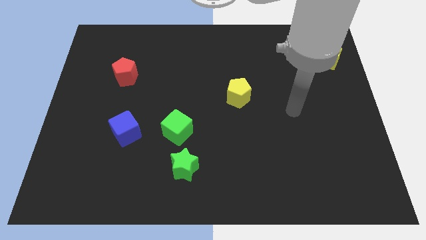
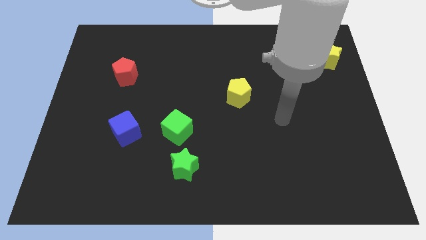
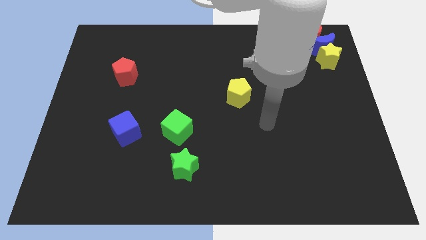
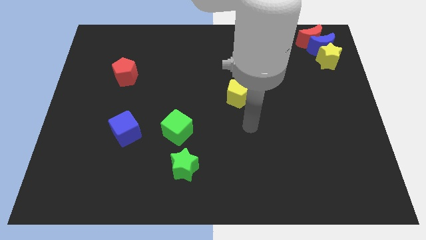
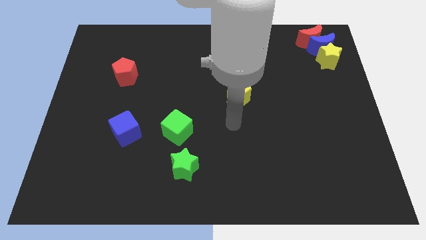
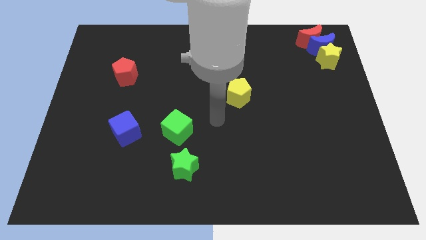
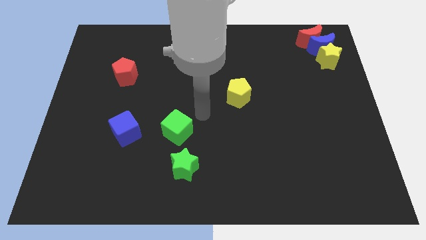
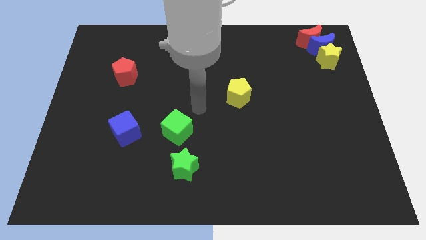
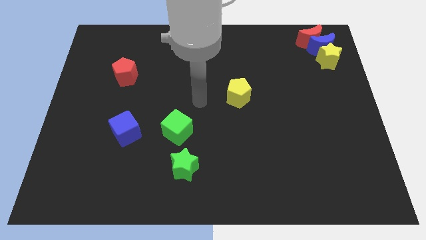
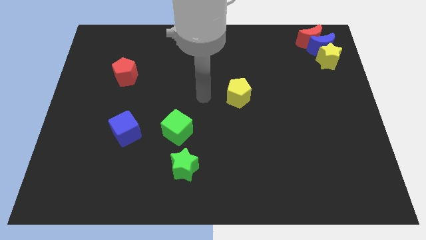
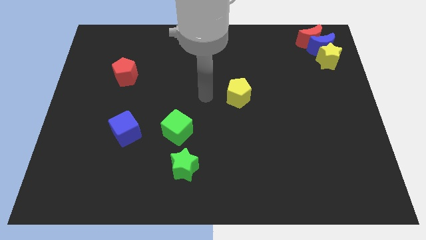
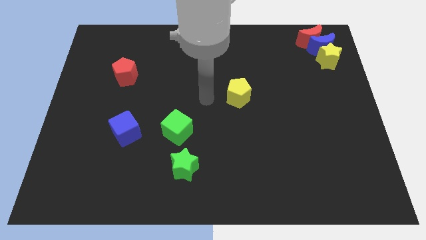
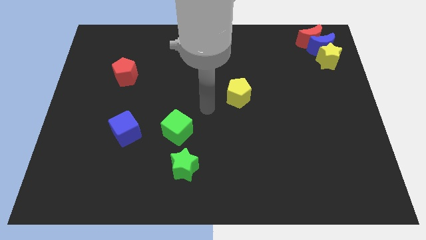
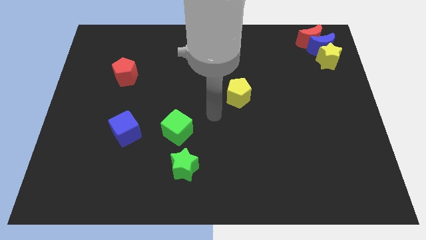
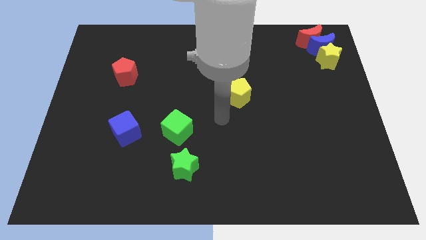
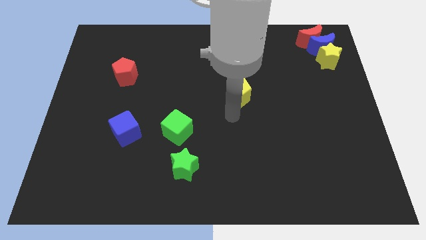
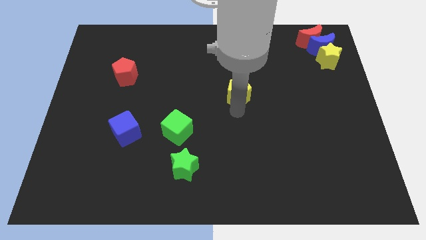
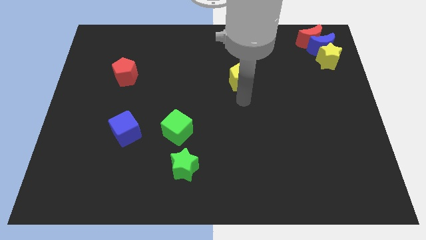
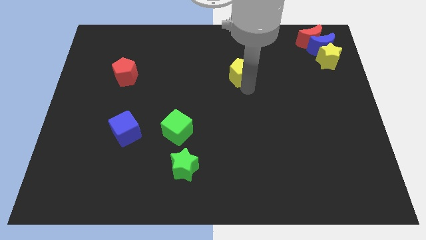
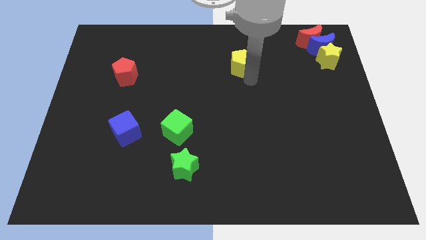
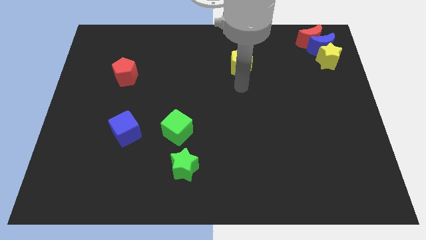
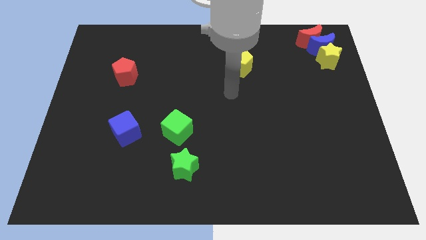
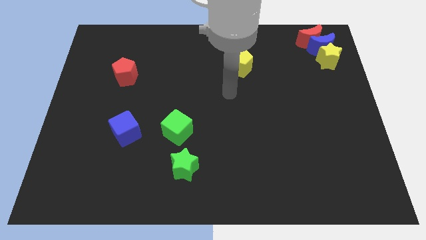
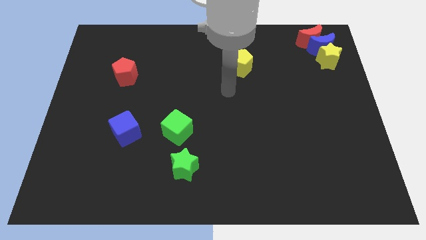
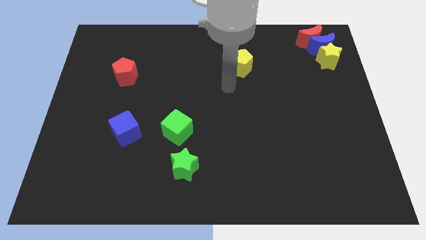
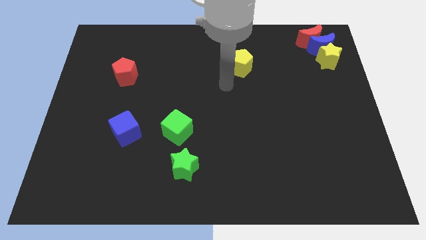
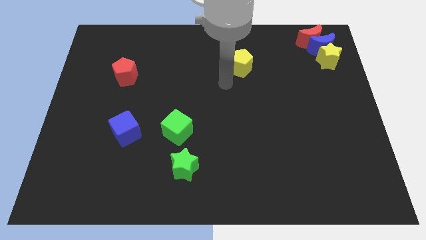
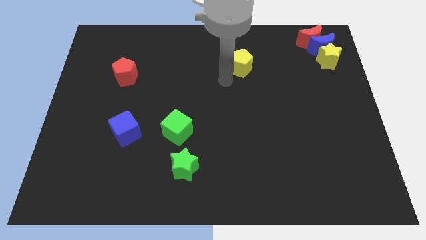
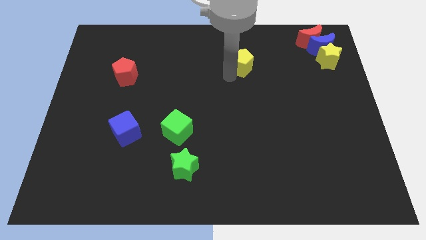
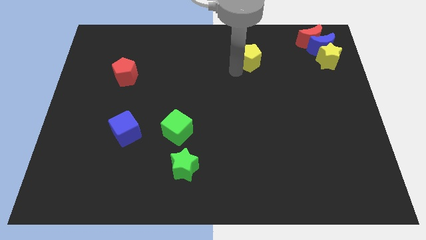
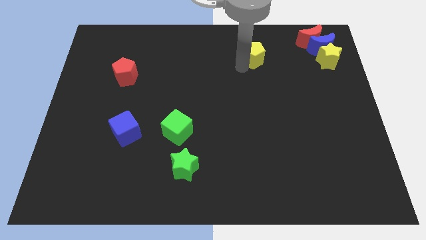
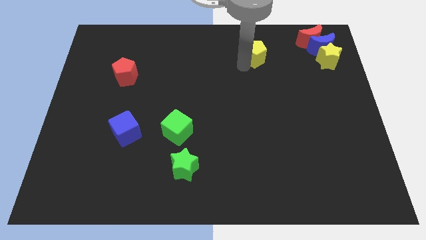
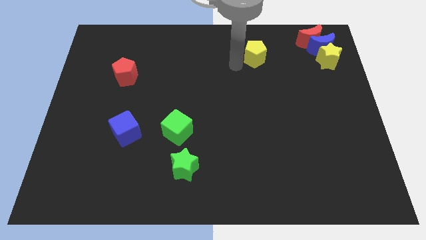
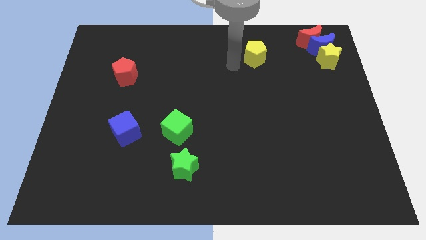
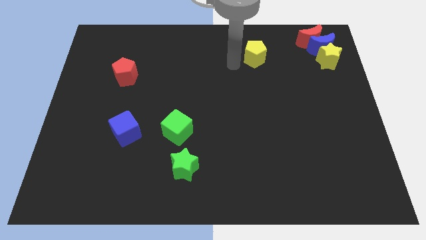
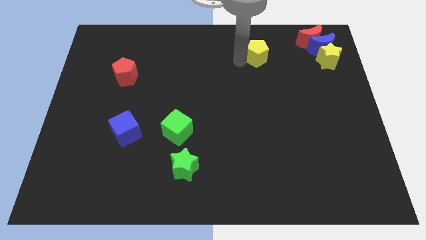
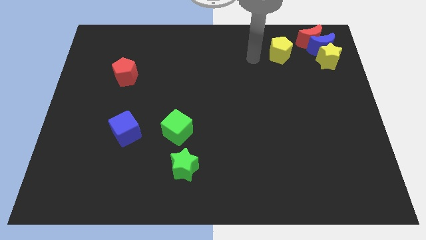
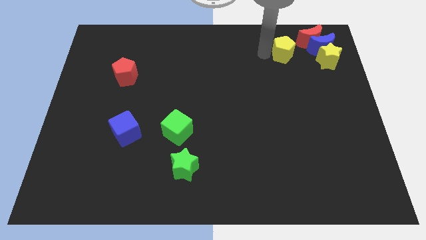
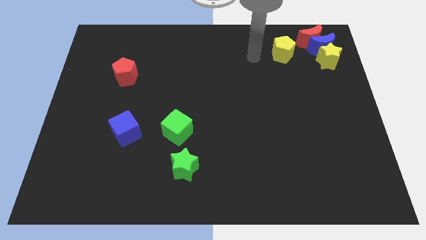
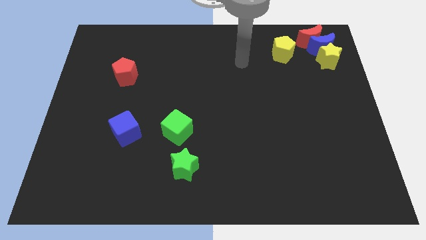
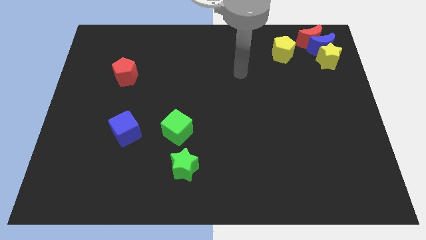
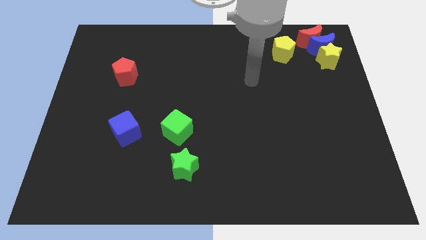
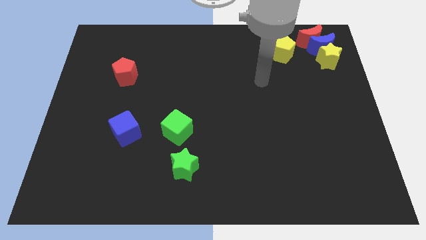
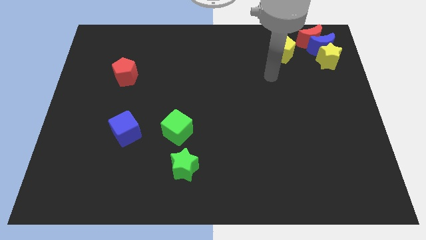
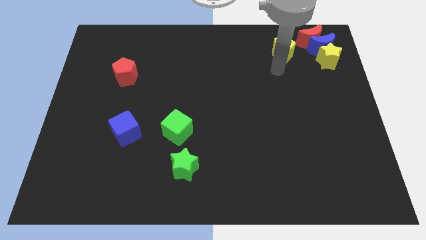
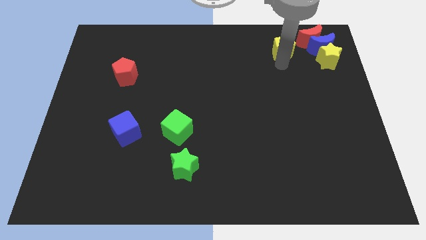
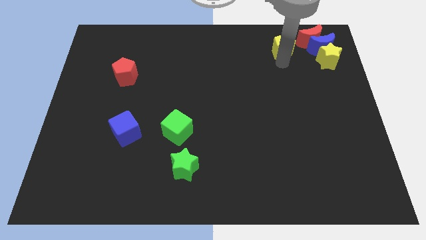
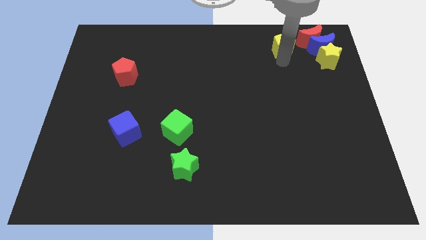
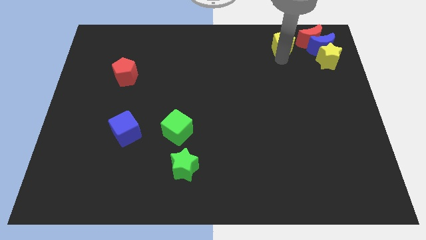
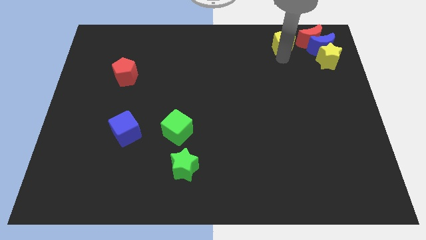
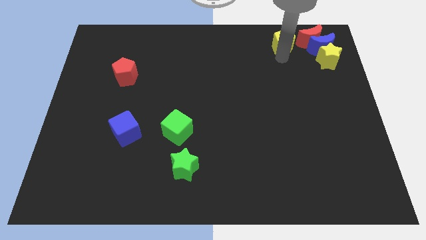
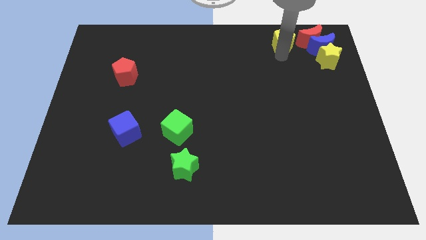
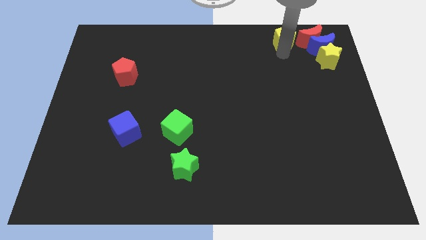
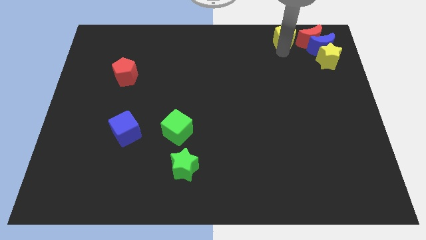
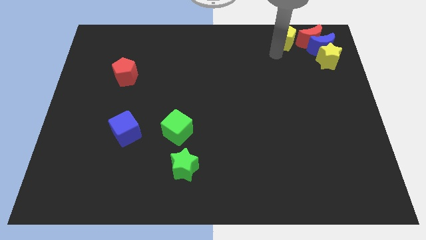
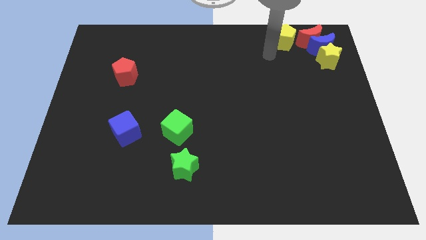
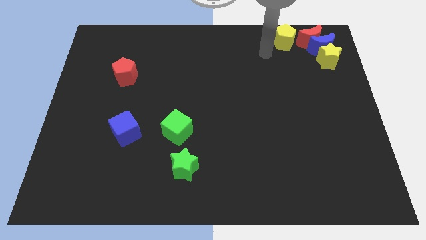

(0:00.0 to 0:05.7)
push the yellow pentagon to the left of the red crescent

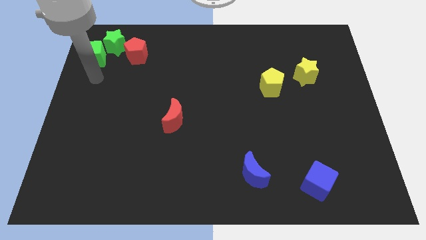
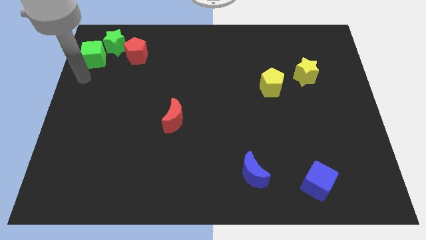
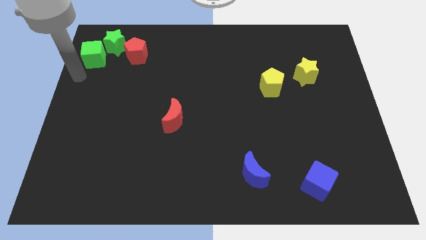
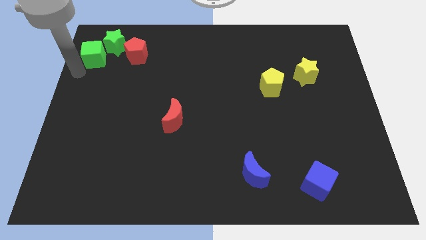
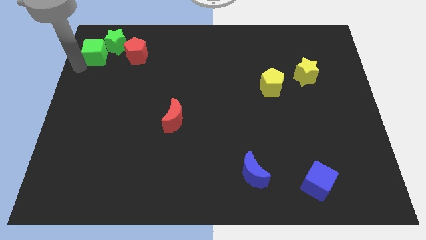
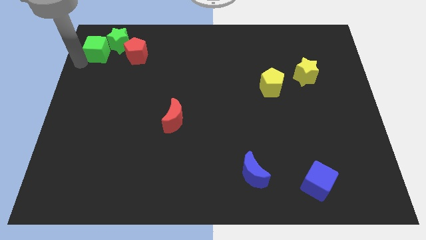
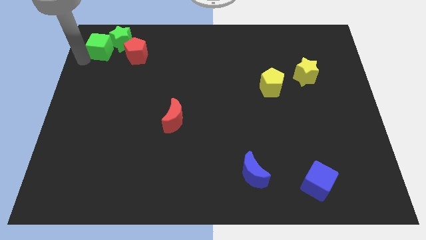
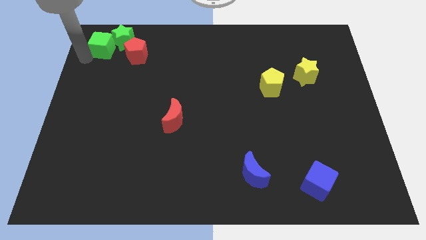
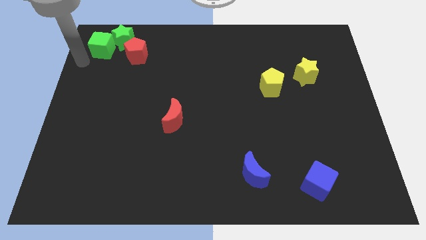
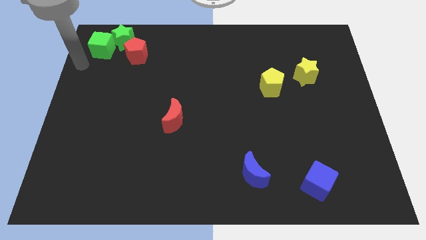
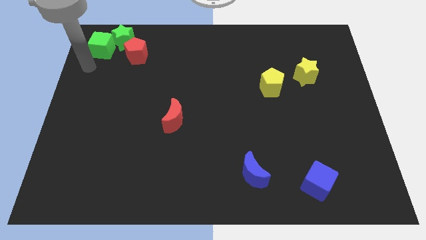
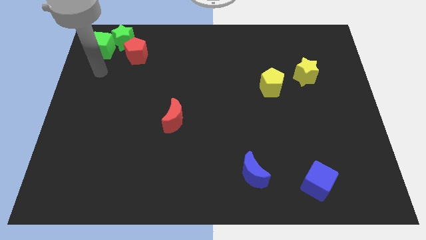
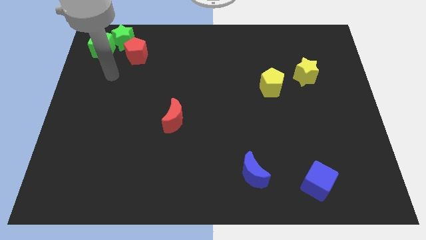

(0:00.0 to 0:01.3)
move the green cube and green star at the top left of the board

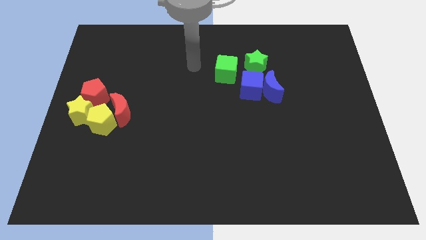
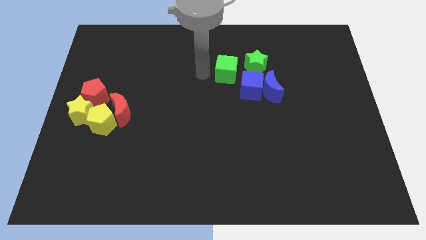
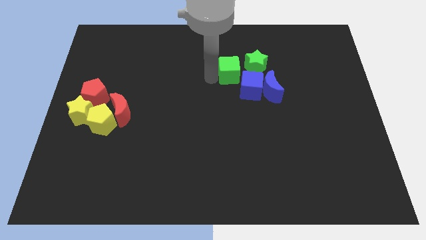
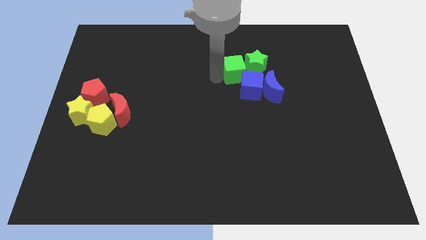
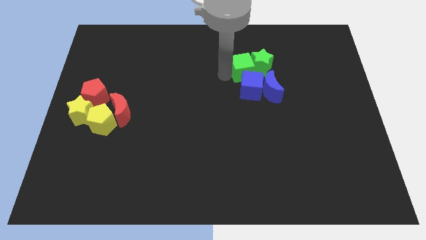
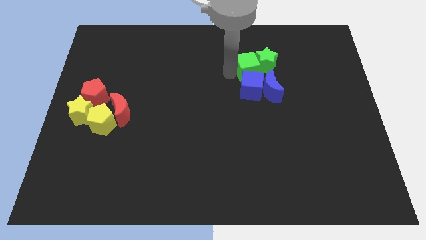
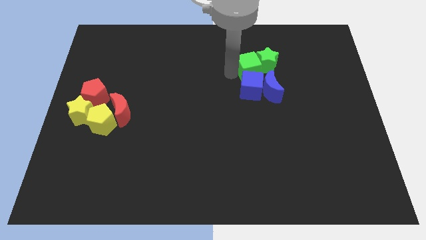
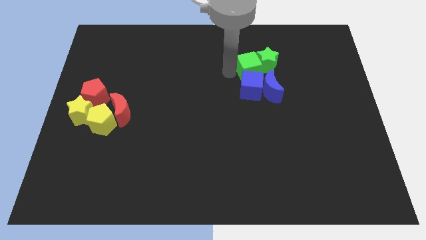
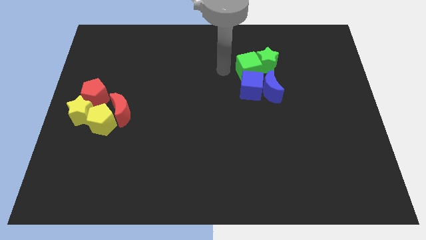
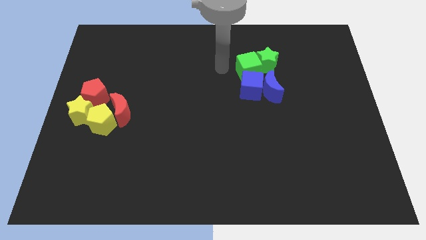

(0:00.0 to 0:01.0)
place green cube above blue cube

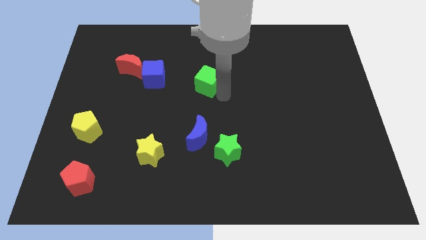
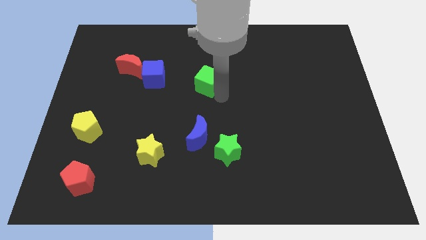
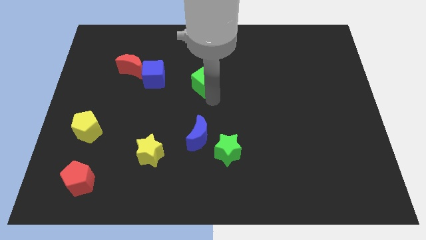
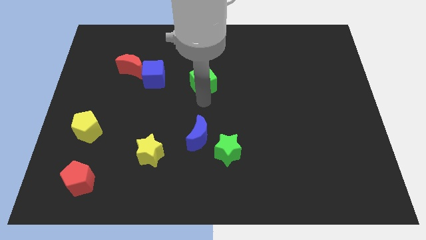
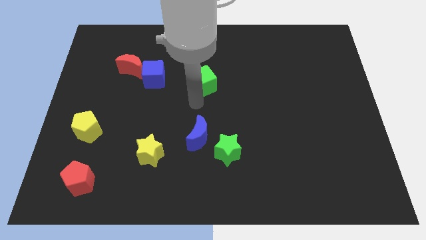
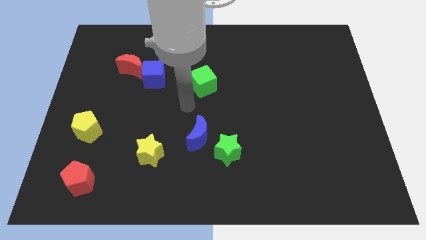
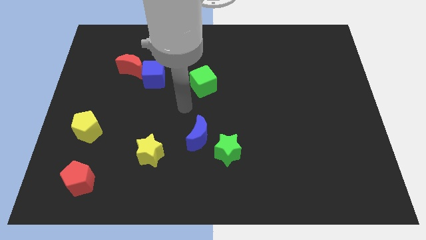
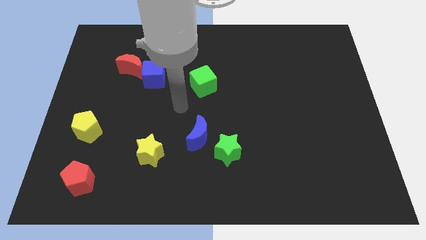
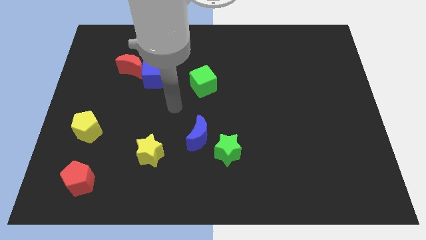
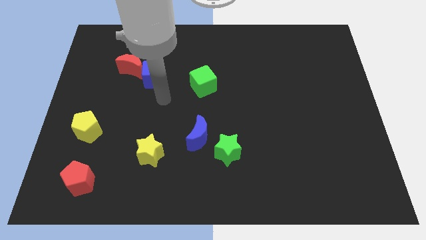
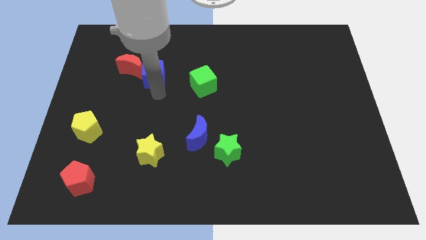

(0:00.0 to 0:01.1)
slide the green cube
